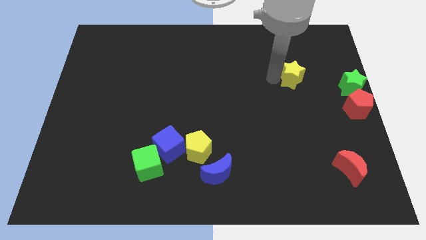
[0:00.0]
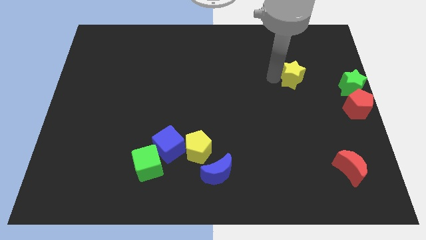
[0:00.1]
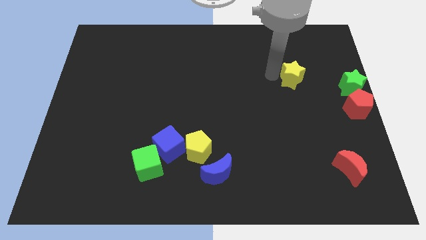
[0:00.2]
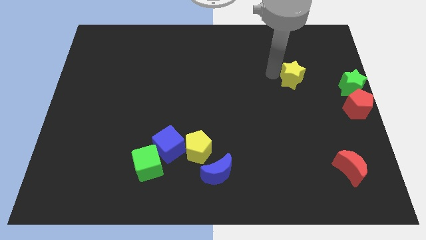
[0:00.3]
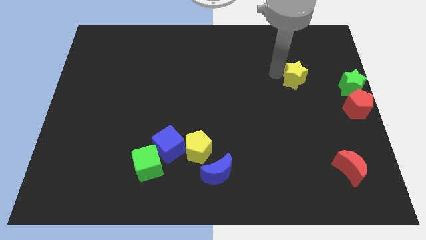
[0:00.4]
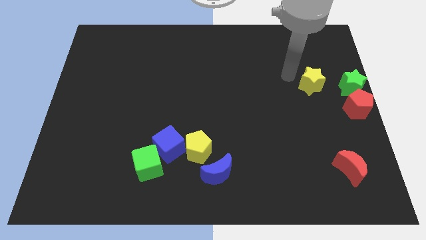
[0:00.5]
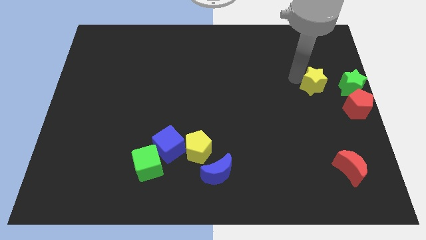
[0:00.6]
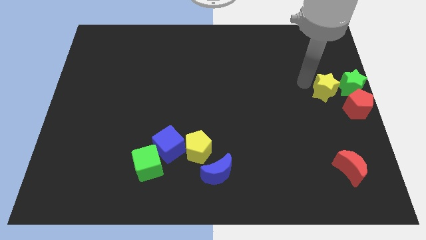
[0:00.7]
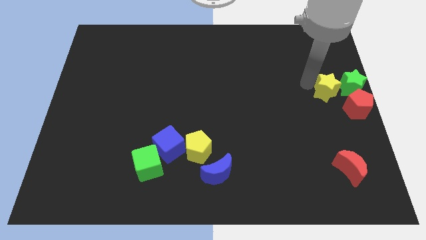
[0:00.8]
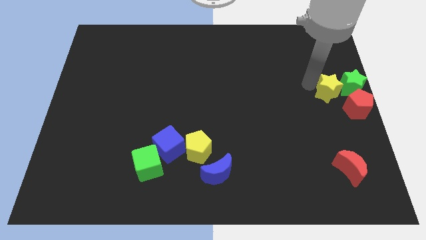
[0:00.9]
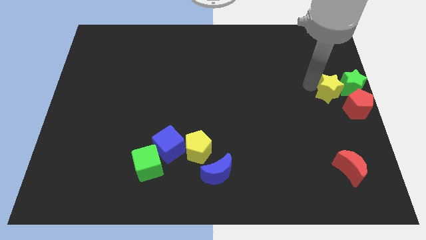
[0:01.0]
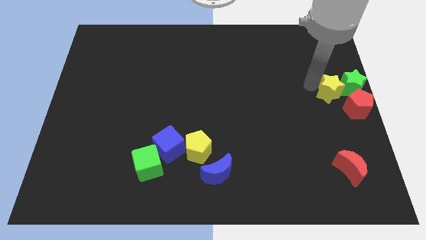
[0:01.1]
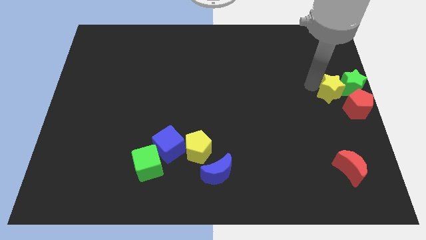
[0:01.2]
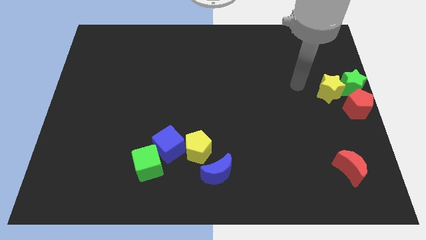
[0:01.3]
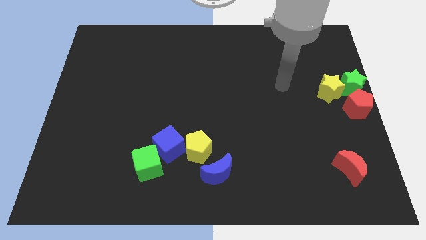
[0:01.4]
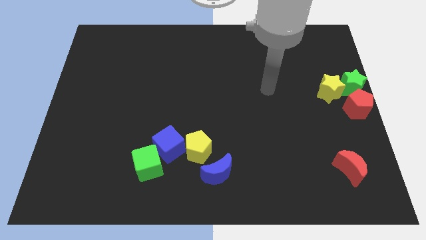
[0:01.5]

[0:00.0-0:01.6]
move yellow star to the left of the green star

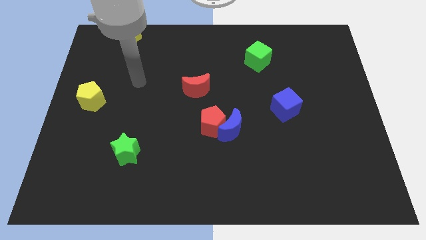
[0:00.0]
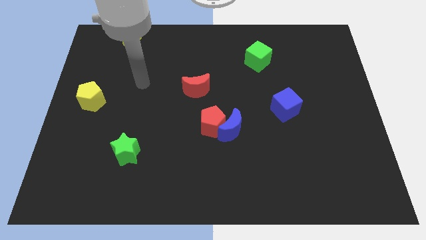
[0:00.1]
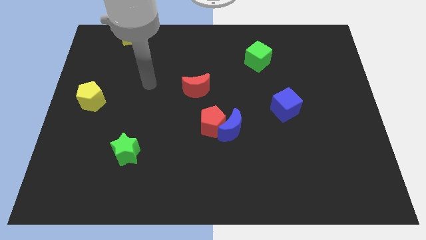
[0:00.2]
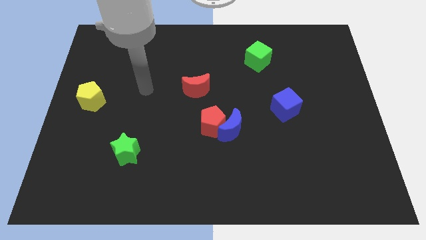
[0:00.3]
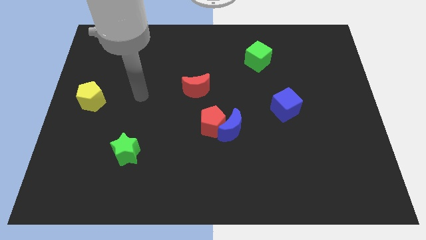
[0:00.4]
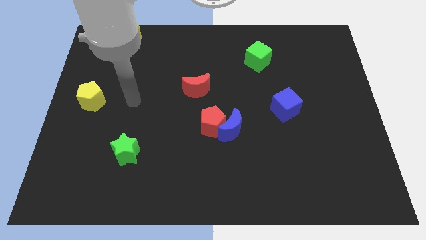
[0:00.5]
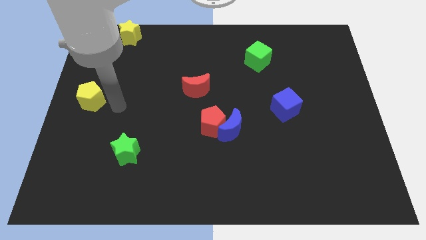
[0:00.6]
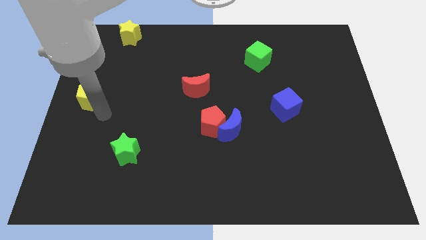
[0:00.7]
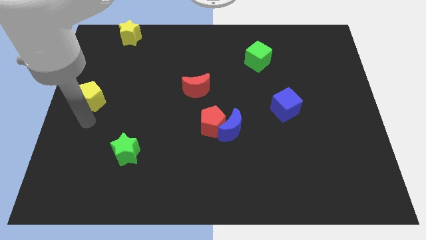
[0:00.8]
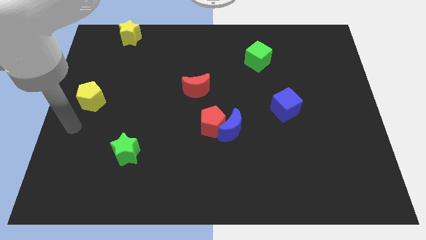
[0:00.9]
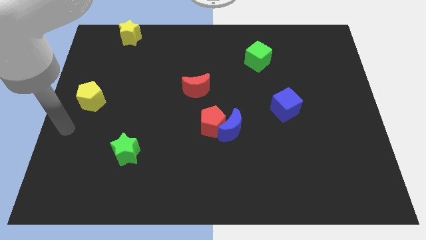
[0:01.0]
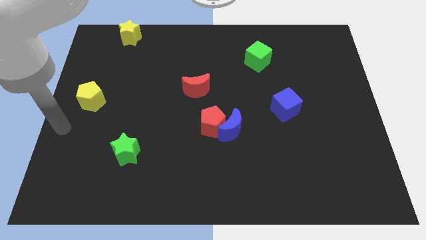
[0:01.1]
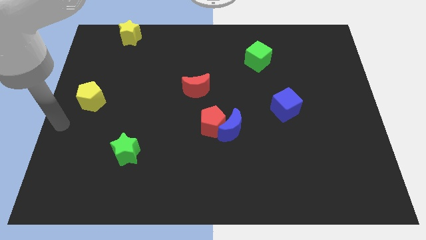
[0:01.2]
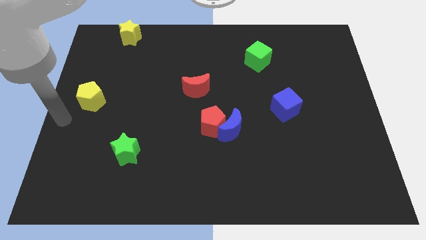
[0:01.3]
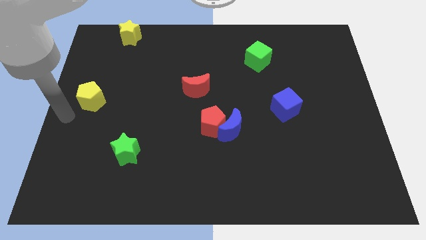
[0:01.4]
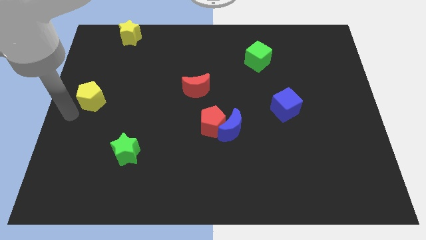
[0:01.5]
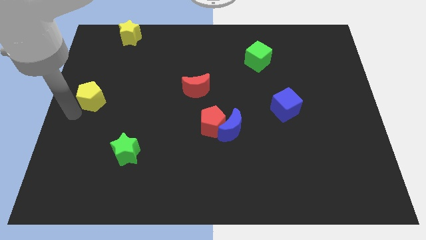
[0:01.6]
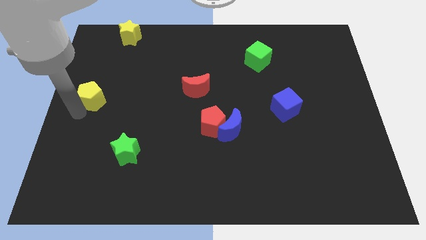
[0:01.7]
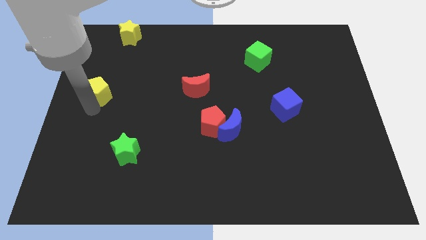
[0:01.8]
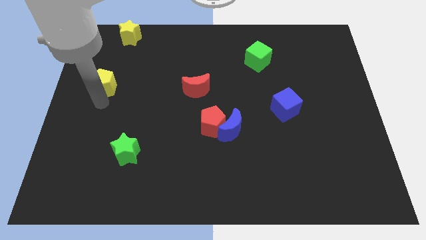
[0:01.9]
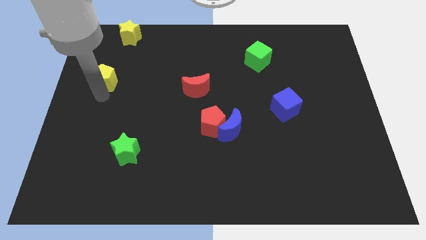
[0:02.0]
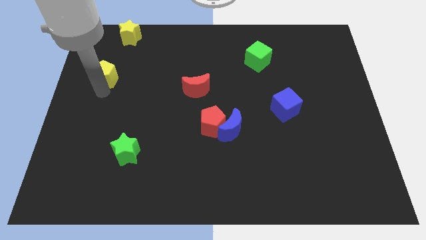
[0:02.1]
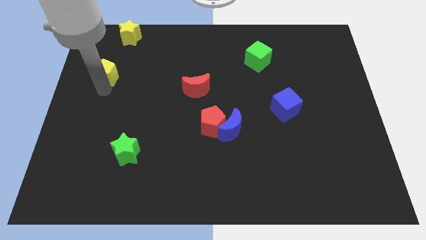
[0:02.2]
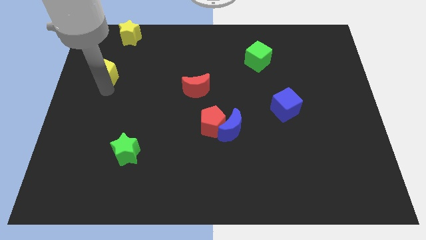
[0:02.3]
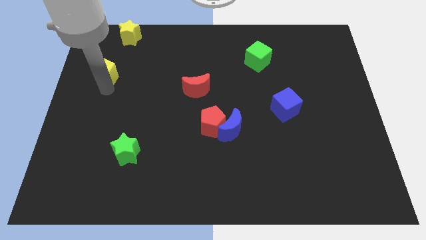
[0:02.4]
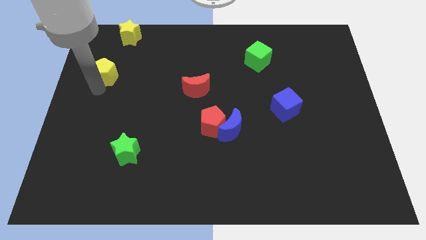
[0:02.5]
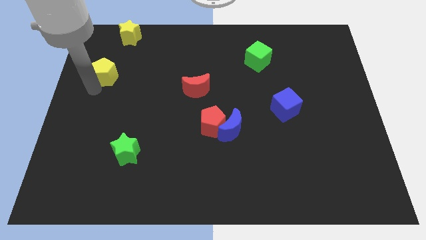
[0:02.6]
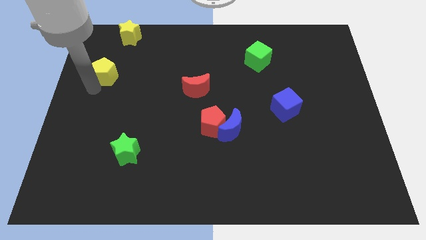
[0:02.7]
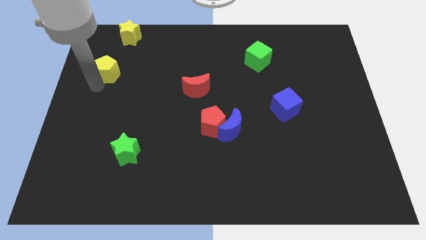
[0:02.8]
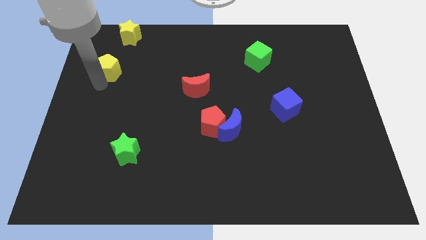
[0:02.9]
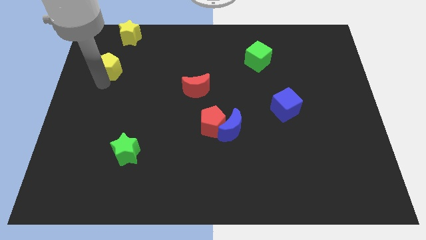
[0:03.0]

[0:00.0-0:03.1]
place yellow pentagon to bottom left of yellow star

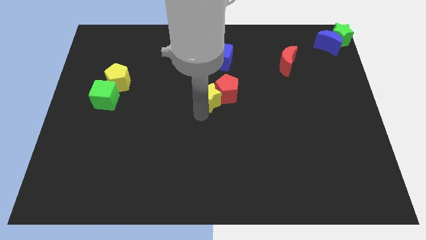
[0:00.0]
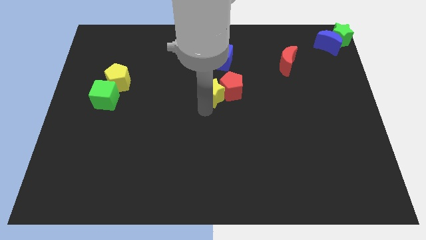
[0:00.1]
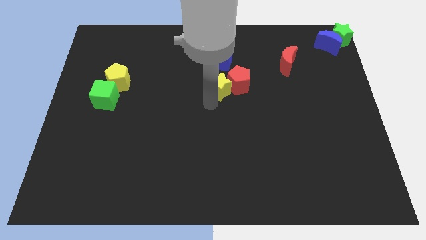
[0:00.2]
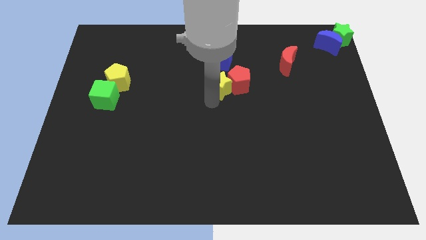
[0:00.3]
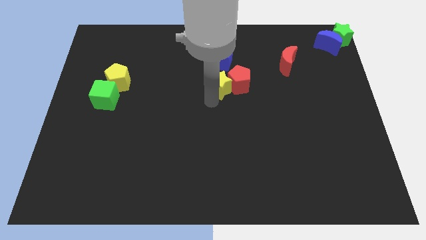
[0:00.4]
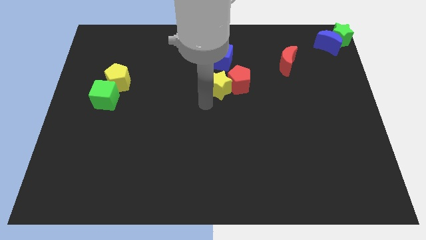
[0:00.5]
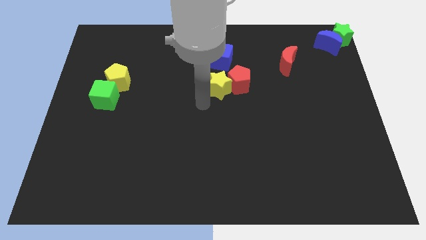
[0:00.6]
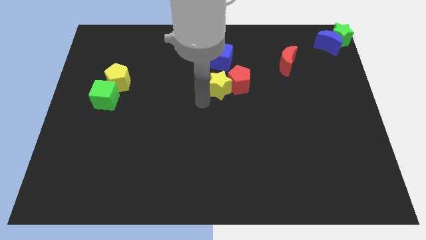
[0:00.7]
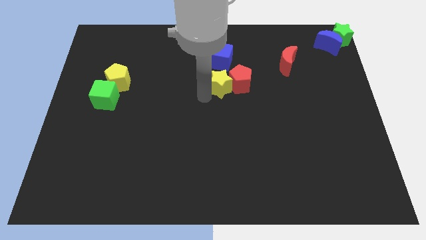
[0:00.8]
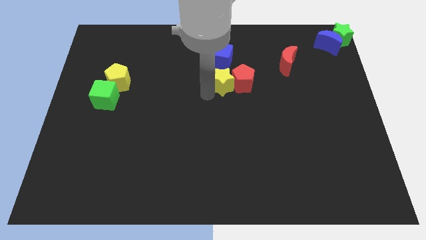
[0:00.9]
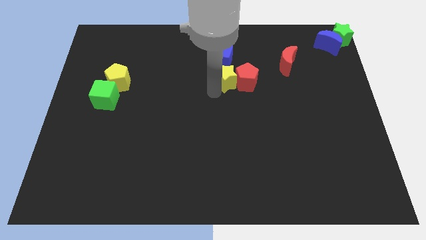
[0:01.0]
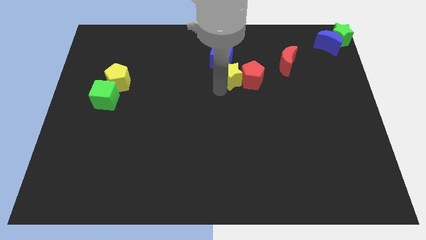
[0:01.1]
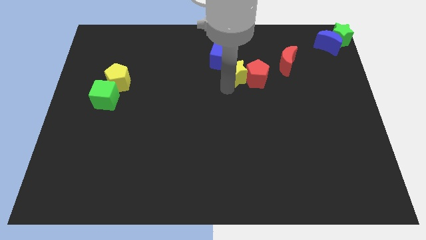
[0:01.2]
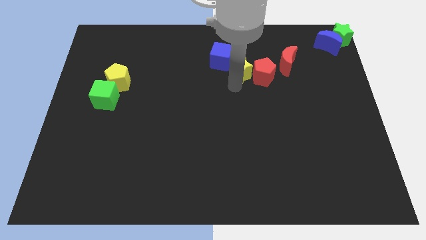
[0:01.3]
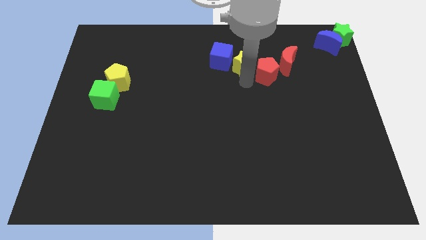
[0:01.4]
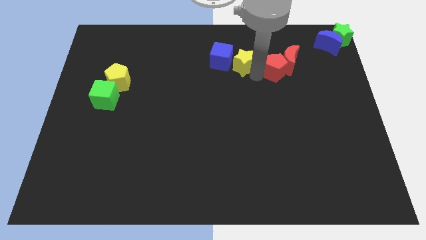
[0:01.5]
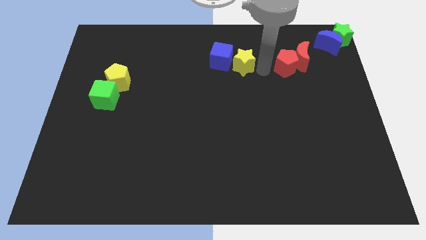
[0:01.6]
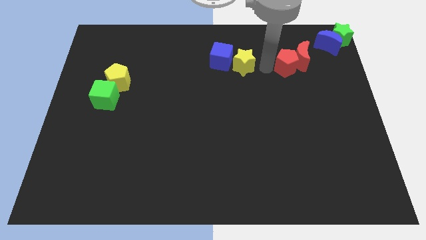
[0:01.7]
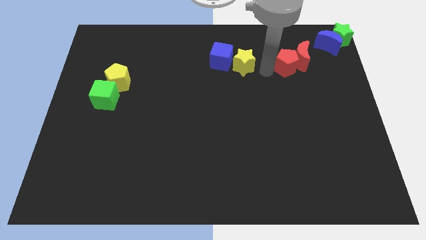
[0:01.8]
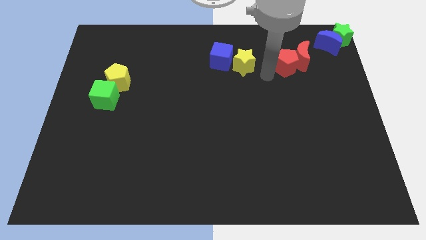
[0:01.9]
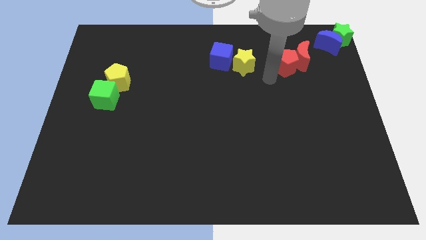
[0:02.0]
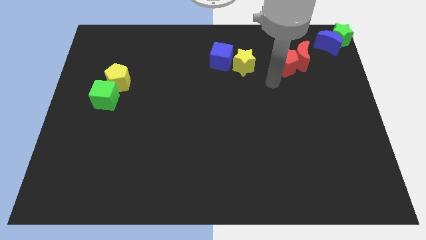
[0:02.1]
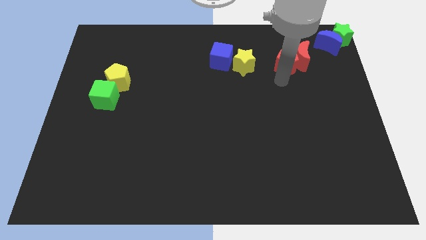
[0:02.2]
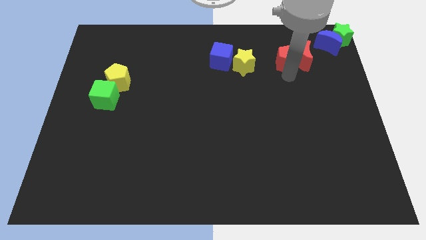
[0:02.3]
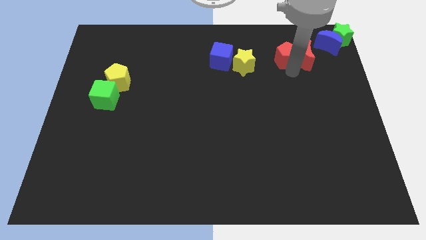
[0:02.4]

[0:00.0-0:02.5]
move red pentagon into red crescent

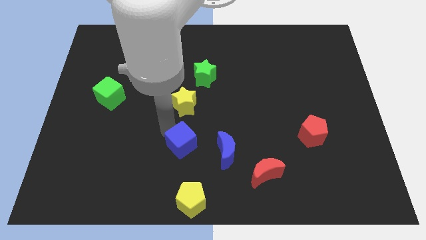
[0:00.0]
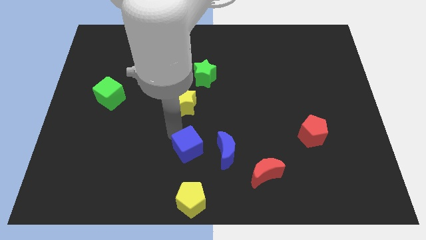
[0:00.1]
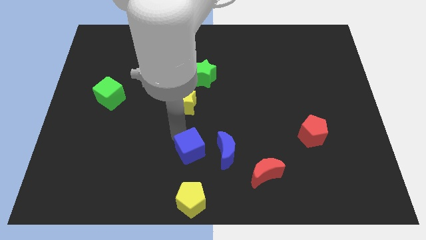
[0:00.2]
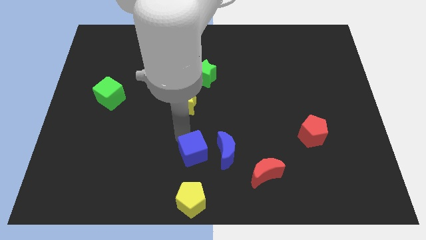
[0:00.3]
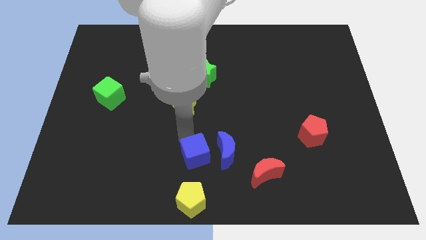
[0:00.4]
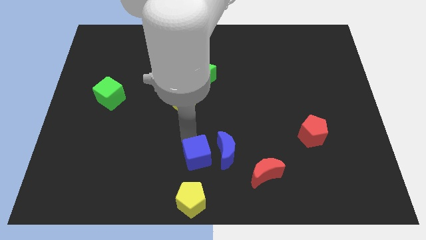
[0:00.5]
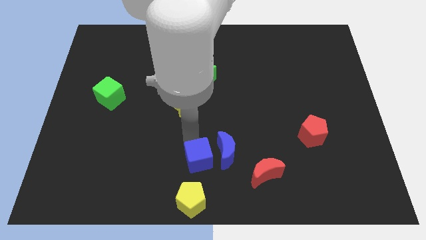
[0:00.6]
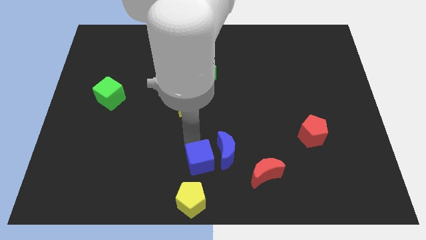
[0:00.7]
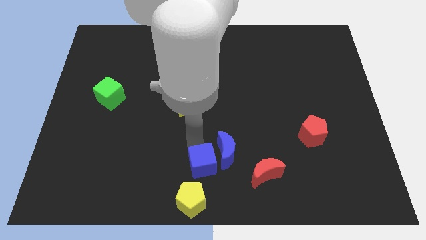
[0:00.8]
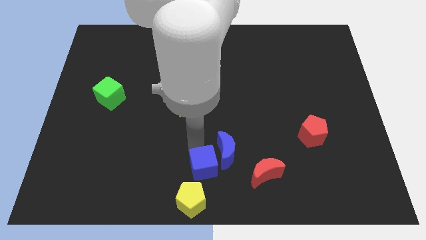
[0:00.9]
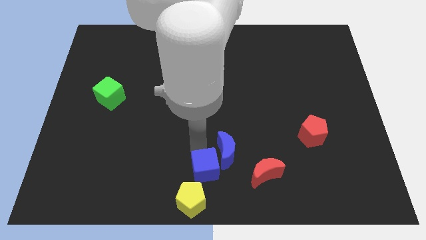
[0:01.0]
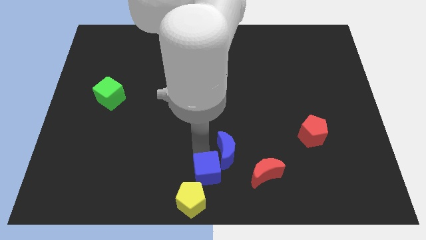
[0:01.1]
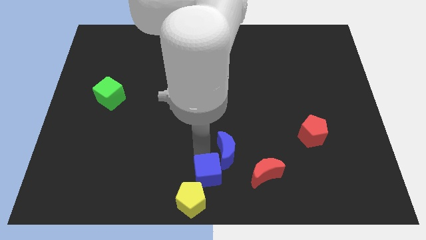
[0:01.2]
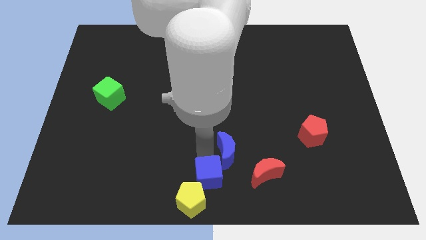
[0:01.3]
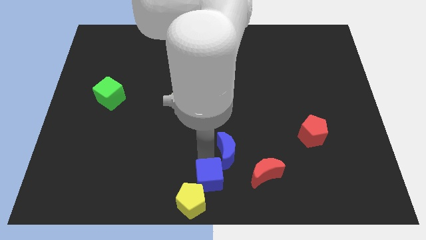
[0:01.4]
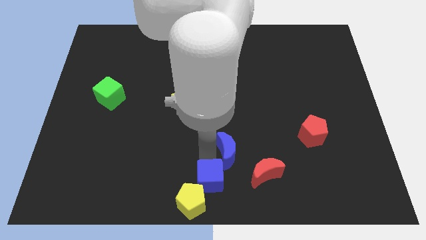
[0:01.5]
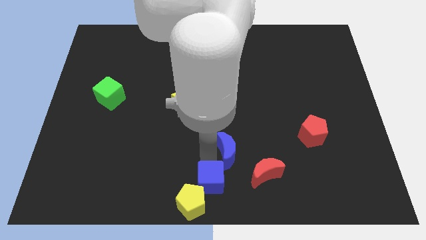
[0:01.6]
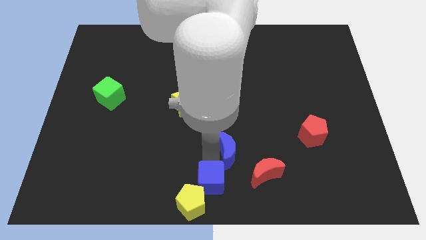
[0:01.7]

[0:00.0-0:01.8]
place the blue cube diagonally in between the blue moon and yellow pentagon
